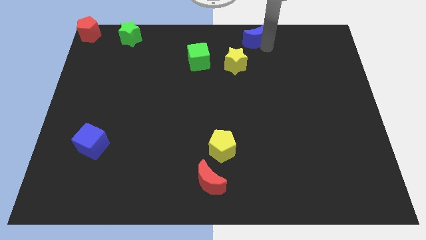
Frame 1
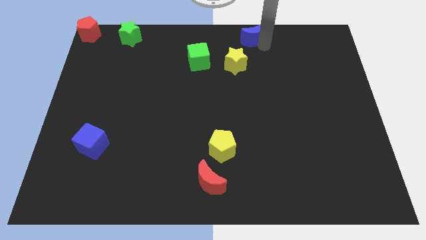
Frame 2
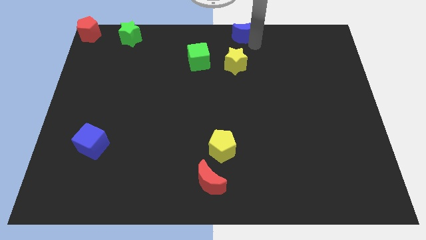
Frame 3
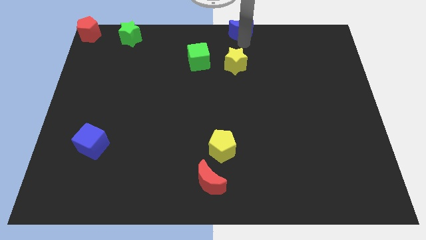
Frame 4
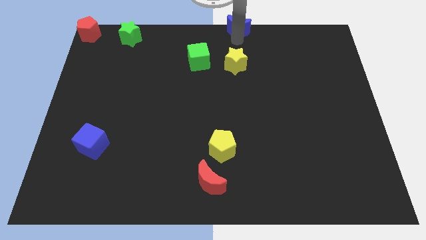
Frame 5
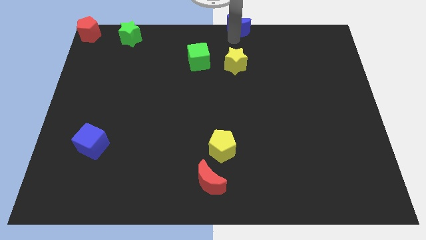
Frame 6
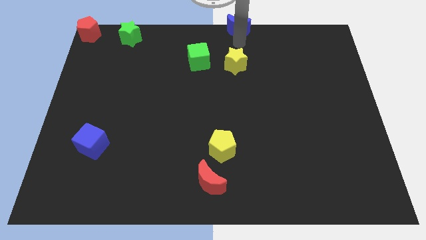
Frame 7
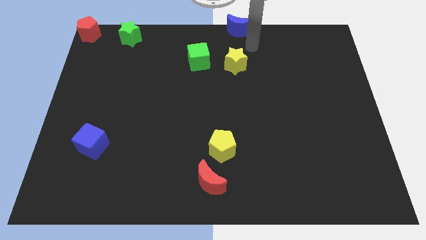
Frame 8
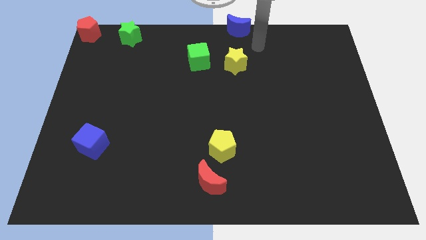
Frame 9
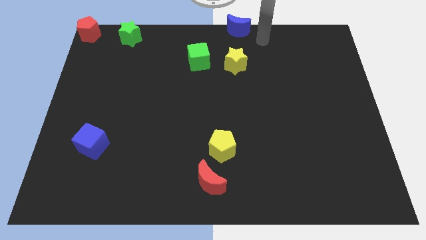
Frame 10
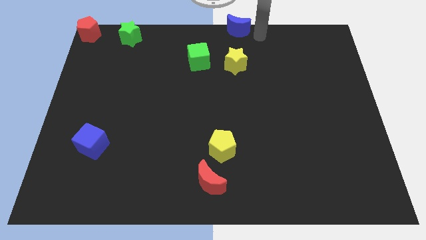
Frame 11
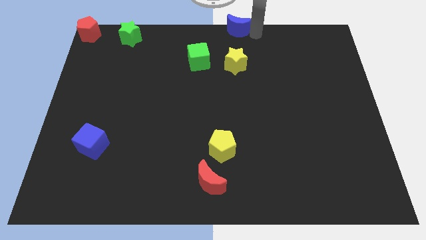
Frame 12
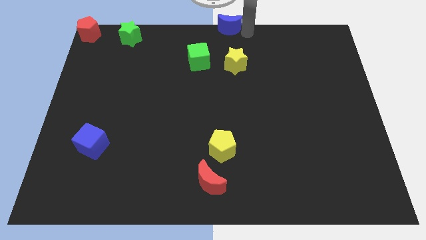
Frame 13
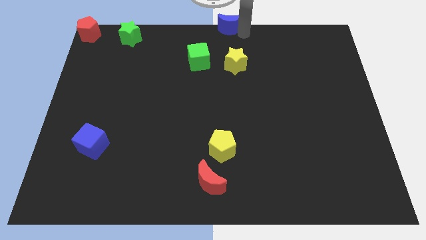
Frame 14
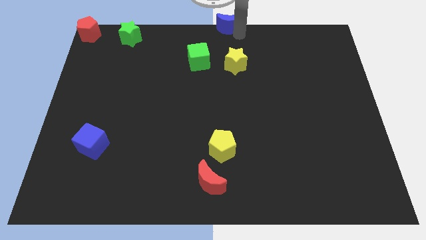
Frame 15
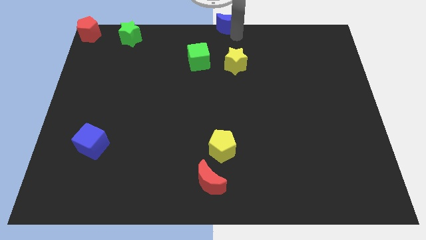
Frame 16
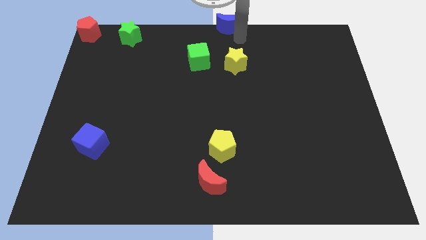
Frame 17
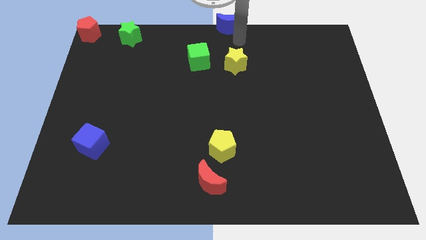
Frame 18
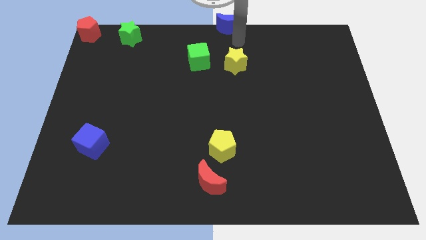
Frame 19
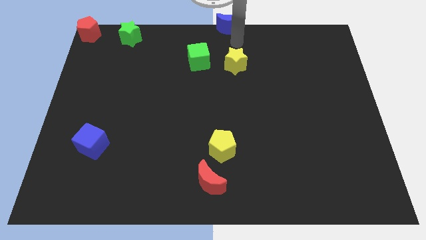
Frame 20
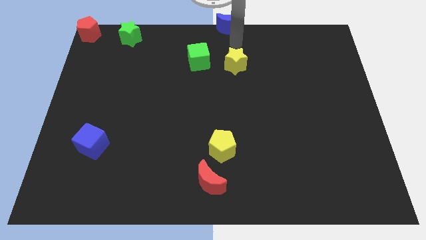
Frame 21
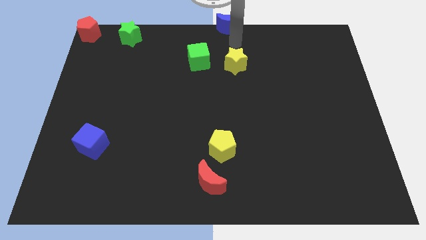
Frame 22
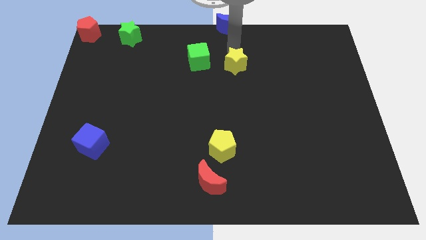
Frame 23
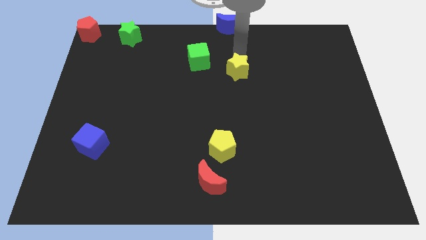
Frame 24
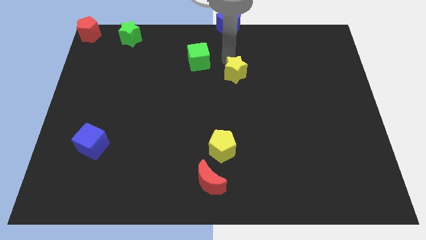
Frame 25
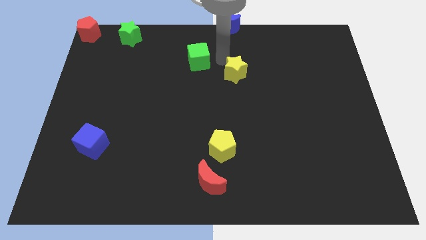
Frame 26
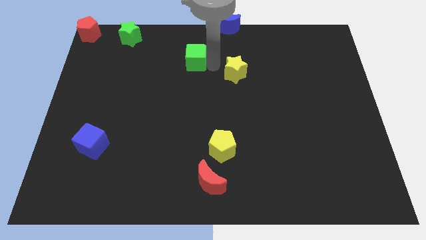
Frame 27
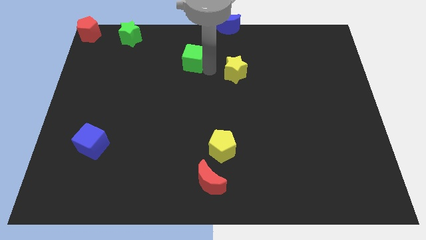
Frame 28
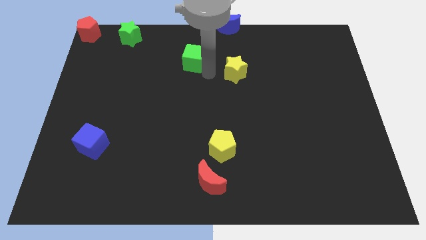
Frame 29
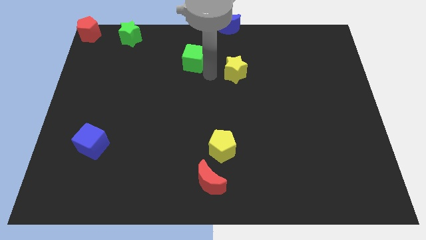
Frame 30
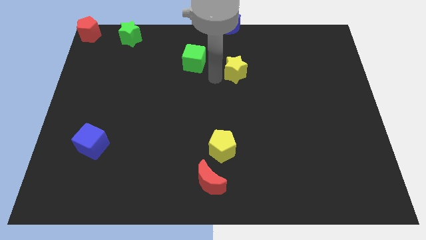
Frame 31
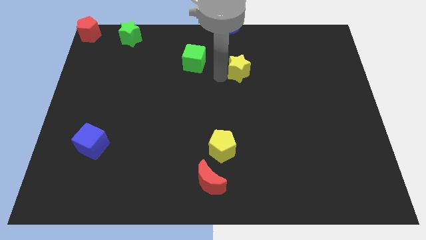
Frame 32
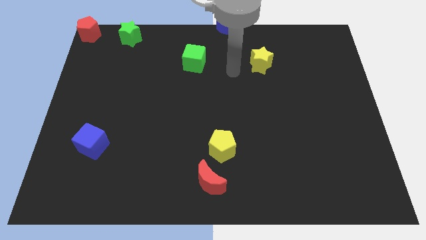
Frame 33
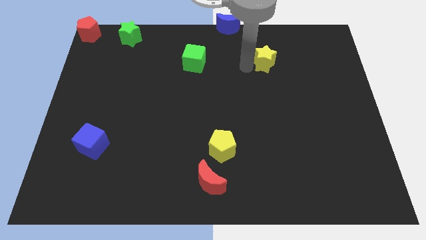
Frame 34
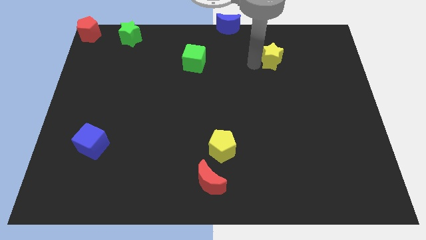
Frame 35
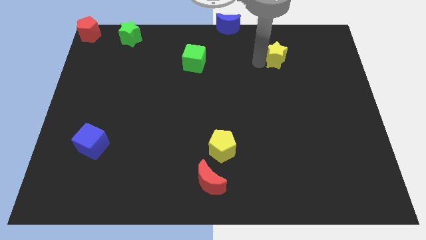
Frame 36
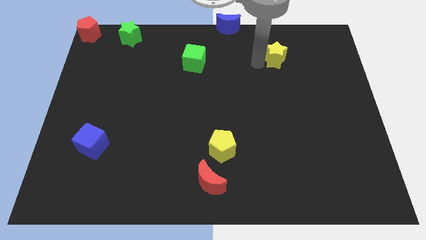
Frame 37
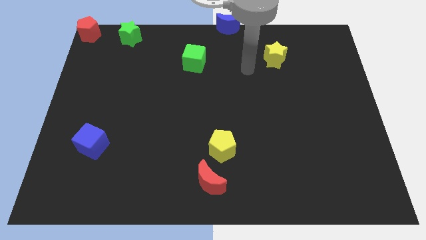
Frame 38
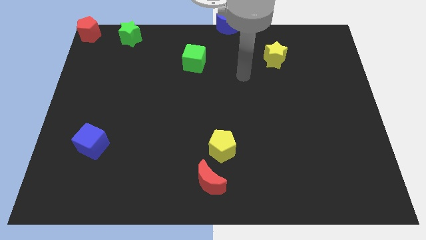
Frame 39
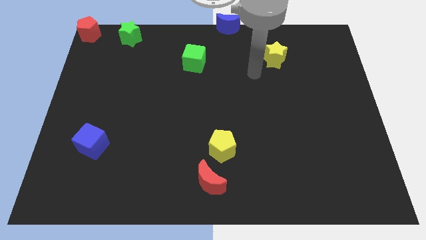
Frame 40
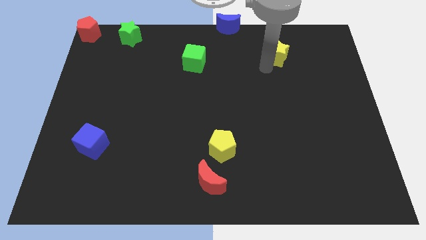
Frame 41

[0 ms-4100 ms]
make a triangle out of yellow star green cube and the blue moon

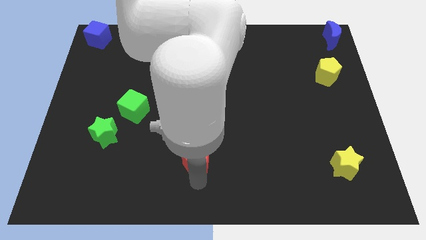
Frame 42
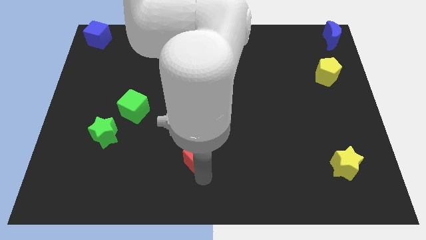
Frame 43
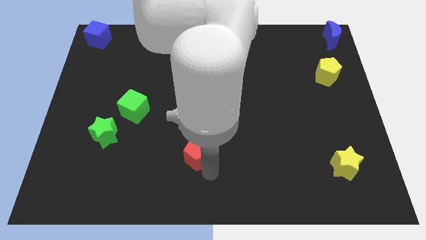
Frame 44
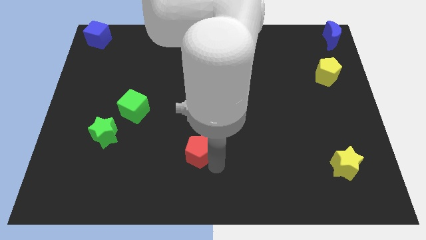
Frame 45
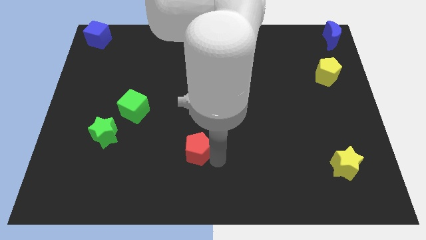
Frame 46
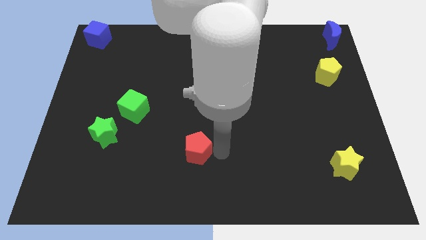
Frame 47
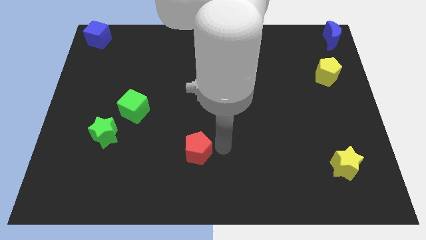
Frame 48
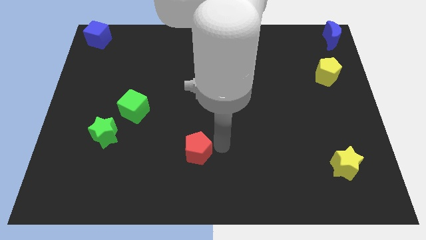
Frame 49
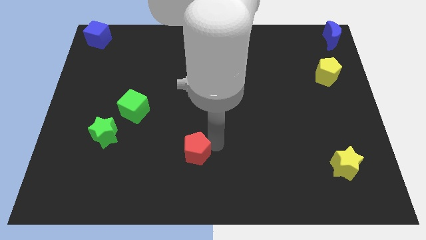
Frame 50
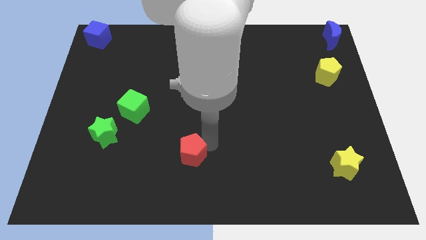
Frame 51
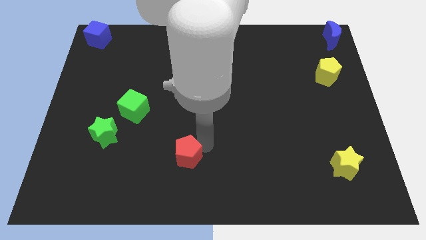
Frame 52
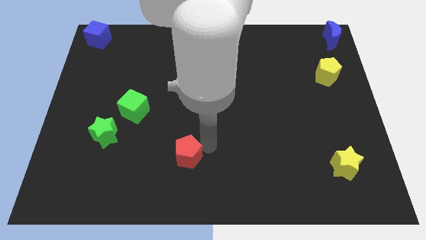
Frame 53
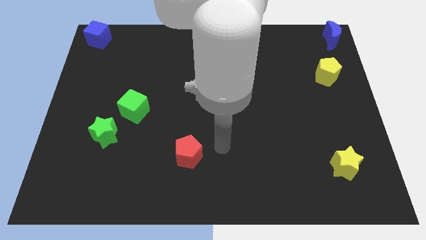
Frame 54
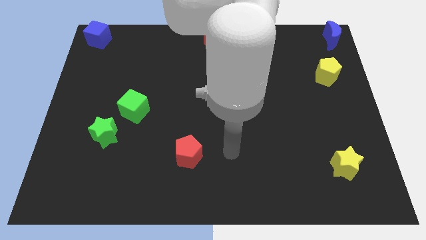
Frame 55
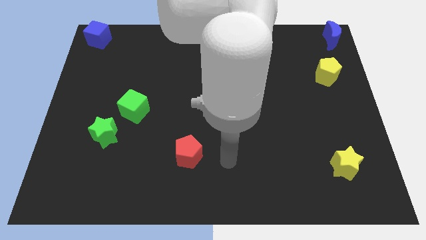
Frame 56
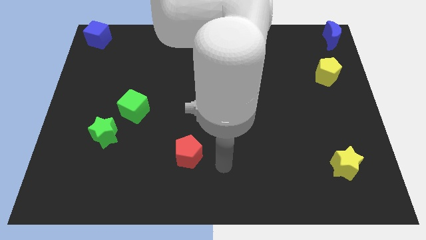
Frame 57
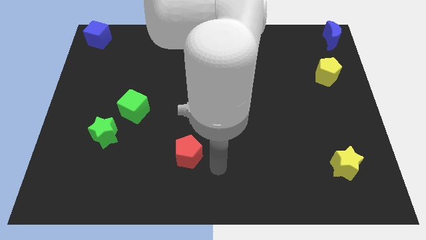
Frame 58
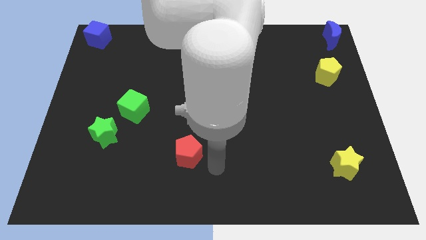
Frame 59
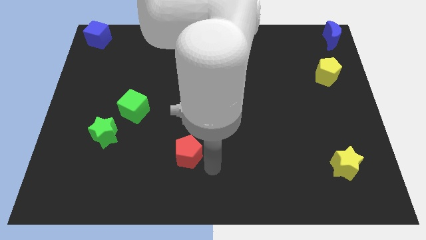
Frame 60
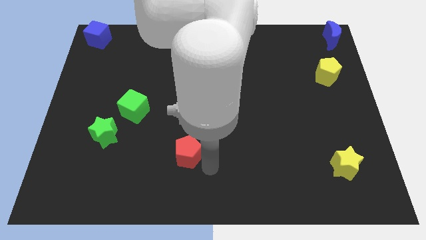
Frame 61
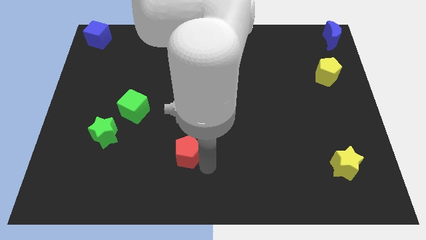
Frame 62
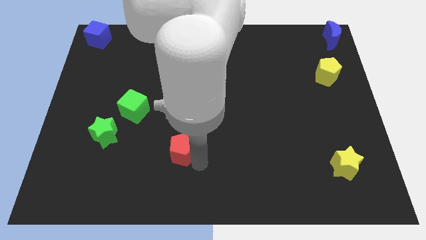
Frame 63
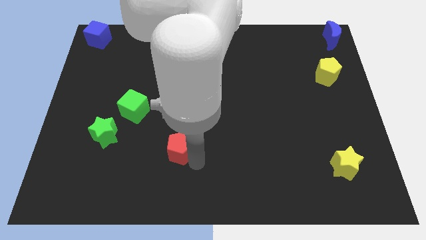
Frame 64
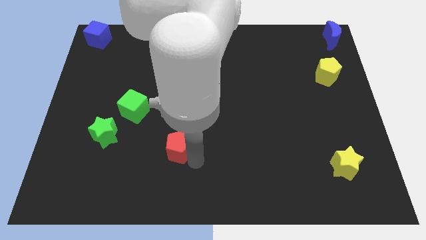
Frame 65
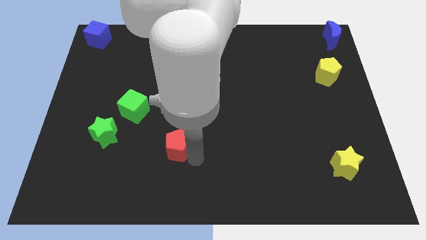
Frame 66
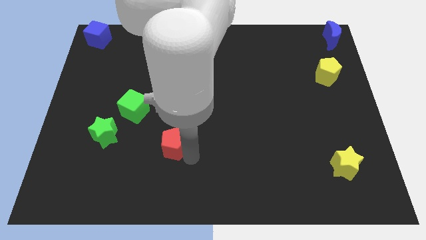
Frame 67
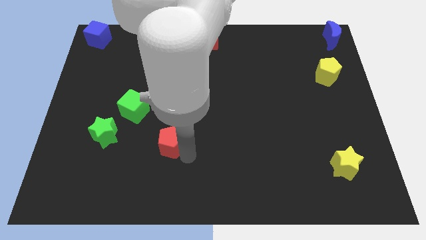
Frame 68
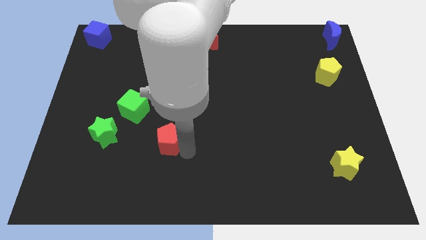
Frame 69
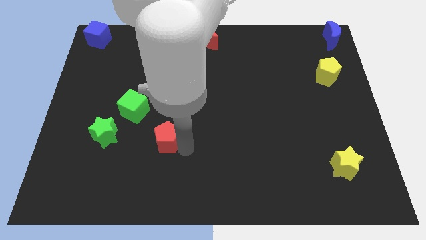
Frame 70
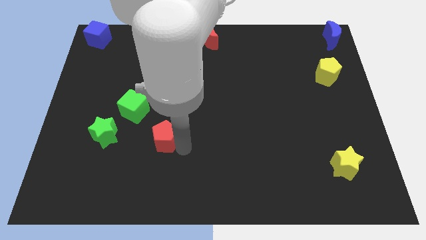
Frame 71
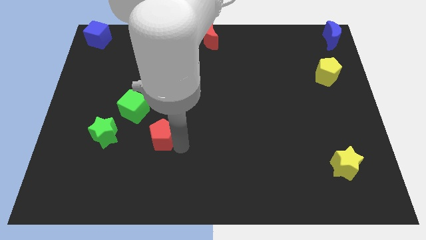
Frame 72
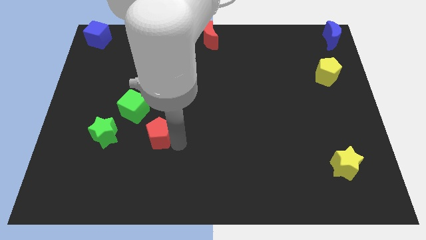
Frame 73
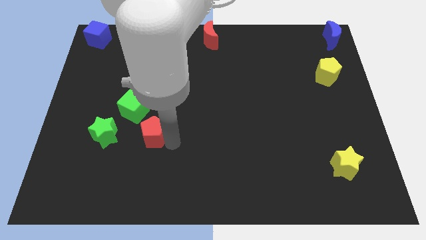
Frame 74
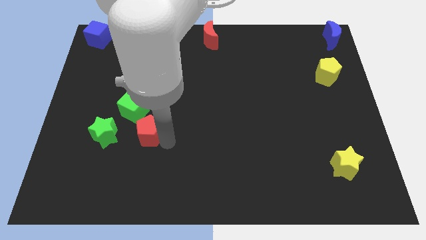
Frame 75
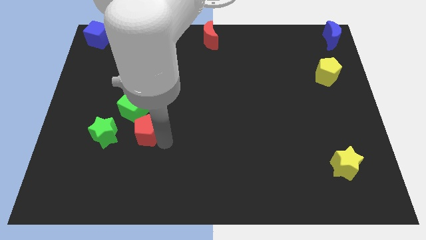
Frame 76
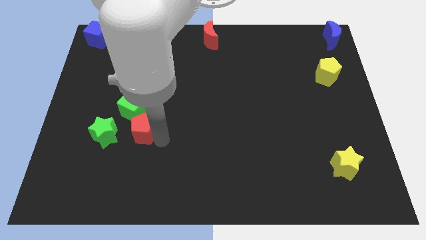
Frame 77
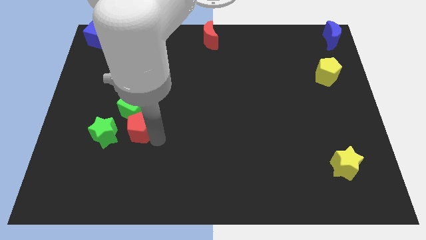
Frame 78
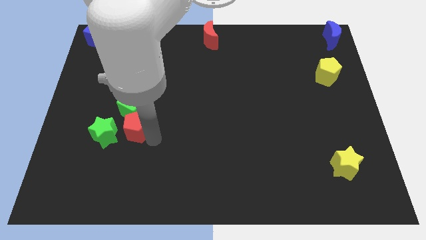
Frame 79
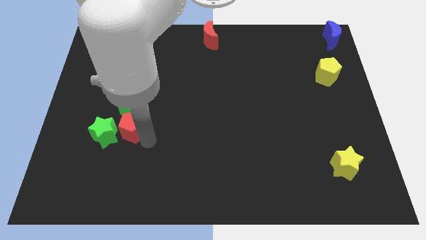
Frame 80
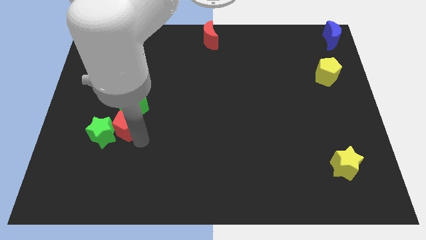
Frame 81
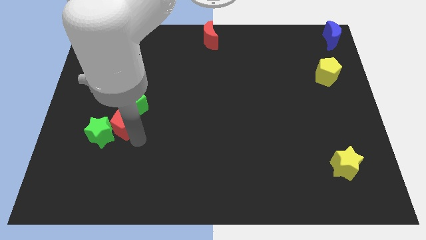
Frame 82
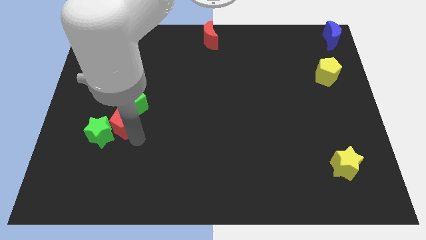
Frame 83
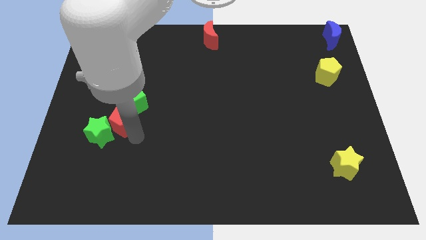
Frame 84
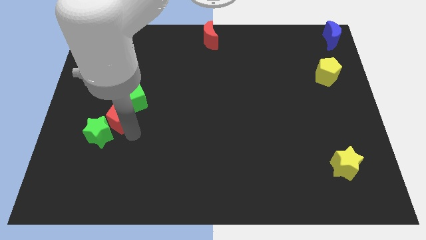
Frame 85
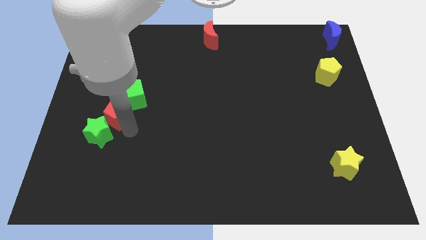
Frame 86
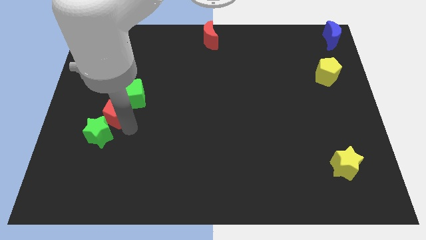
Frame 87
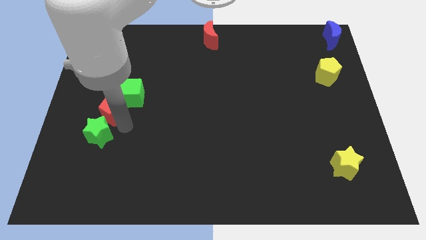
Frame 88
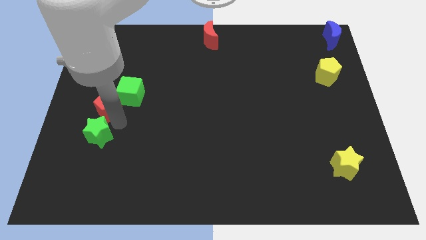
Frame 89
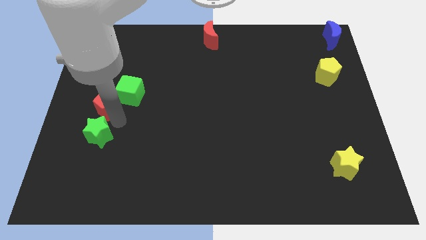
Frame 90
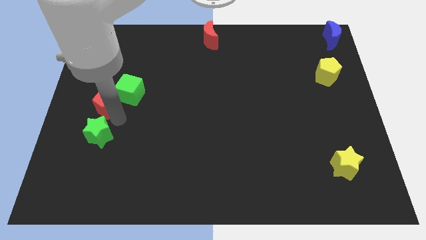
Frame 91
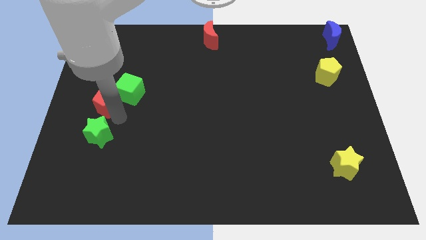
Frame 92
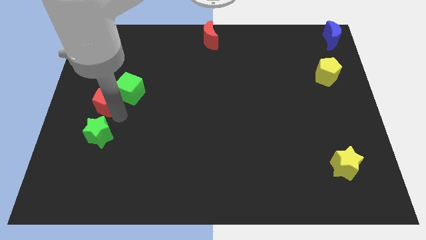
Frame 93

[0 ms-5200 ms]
place the red pentagon in between the green cube and green star
